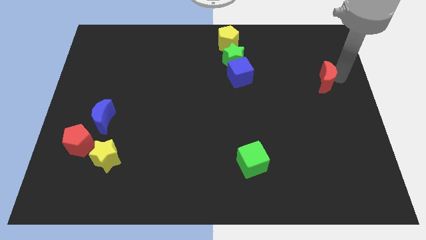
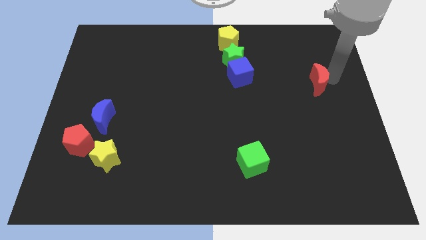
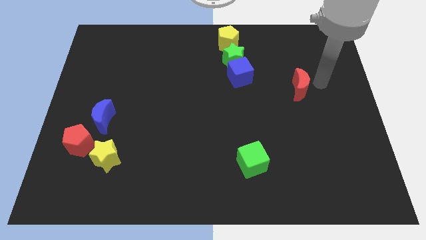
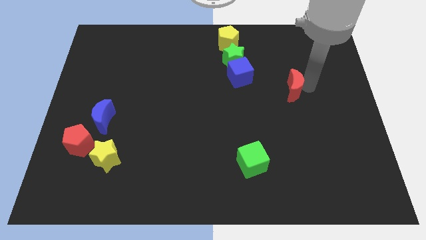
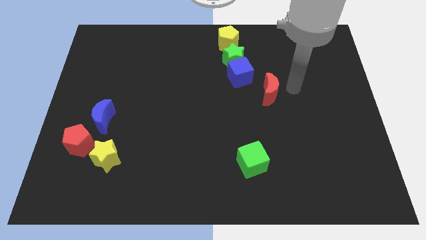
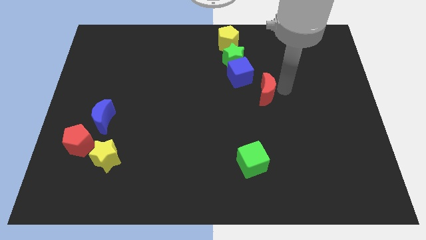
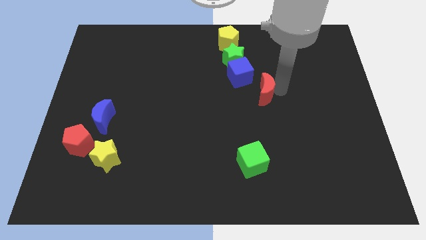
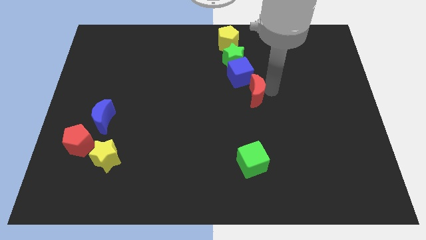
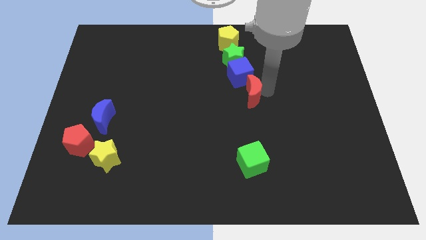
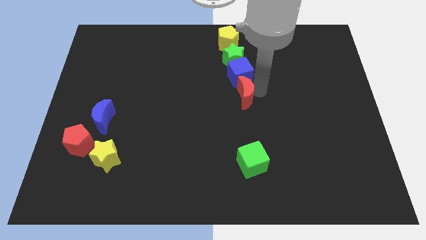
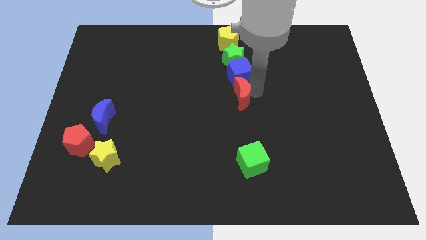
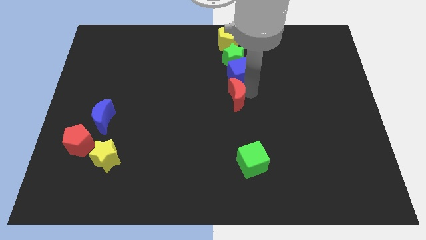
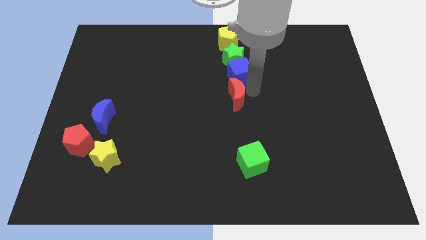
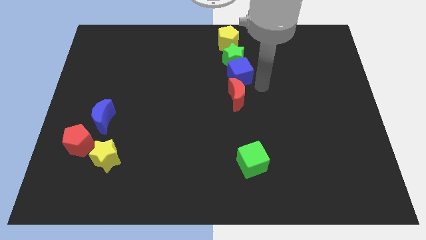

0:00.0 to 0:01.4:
move the red crescent to the center of the board

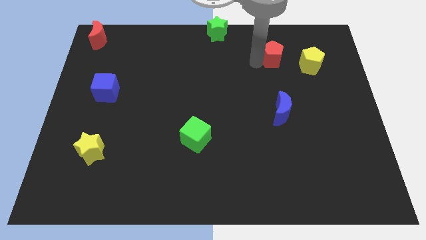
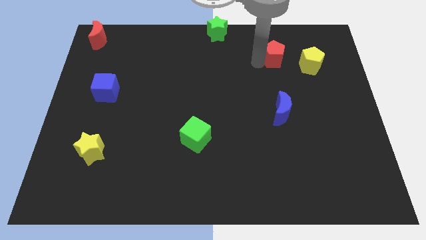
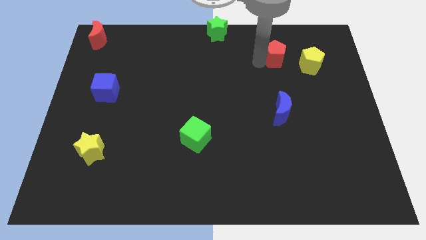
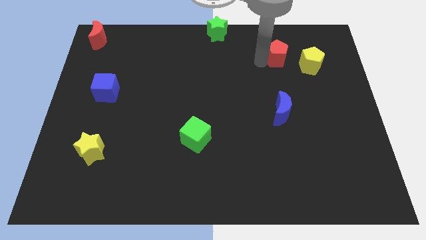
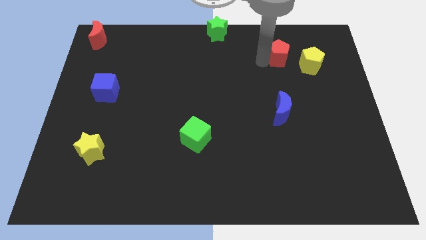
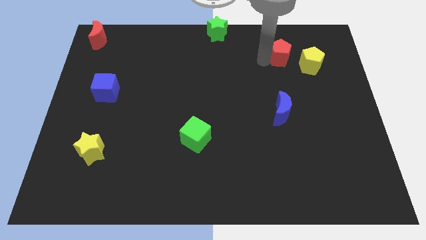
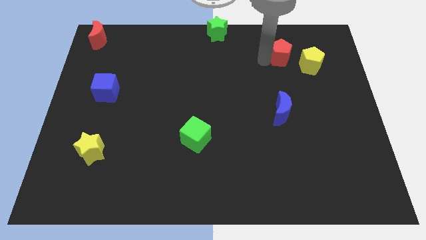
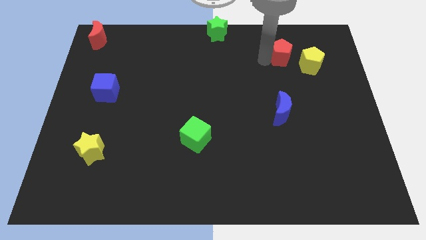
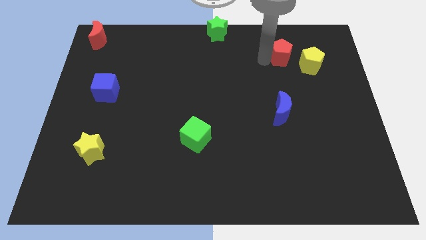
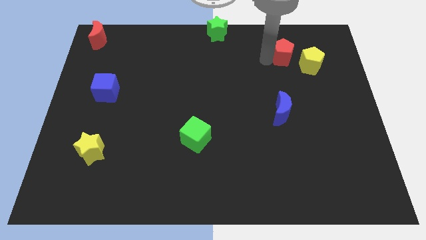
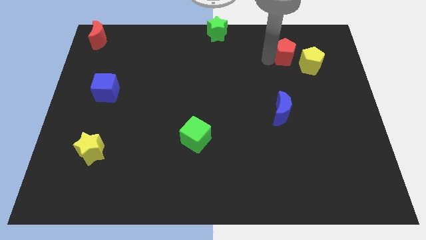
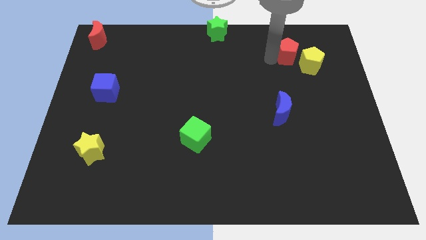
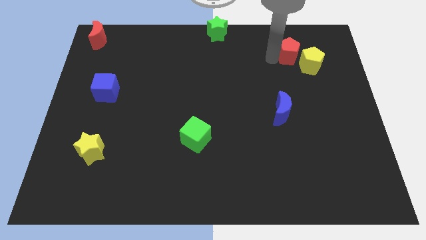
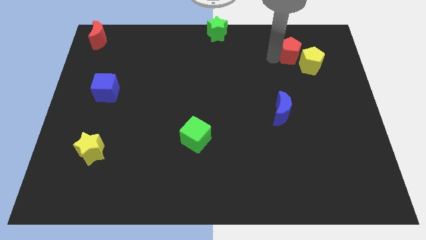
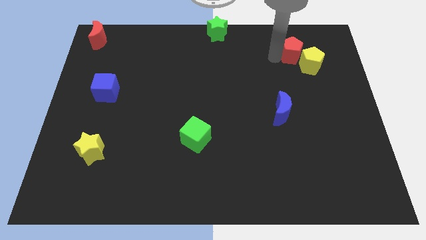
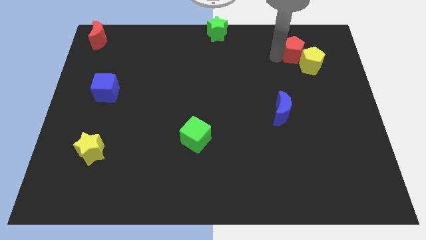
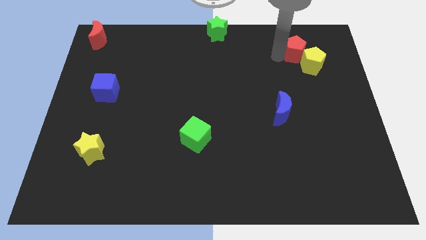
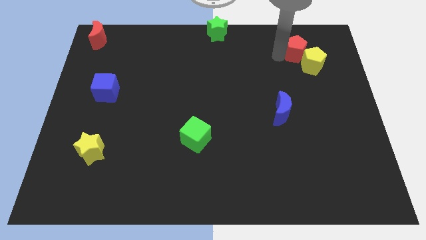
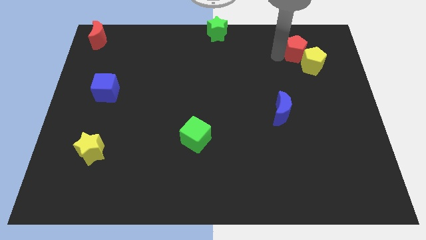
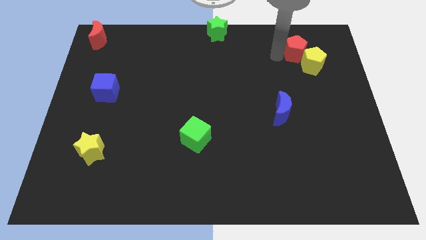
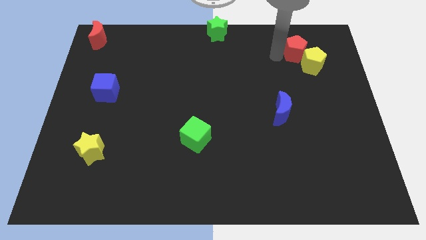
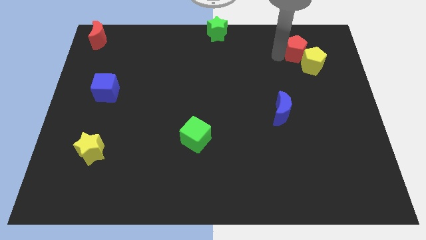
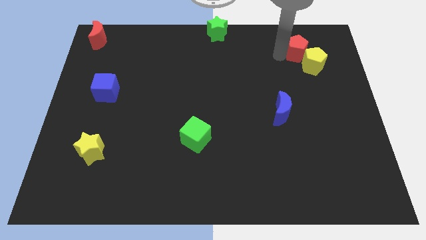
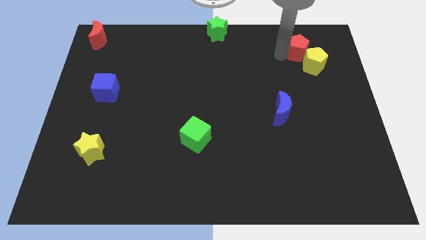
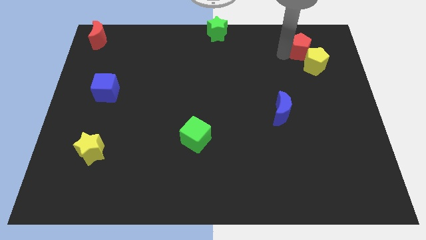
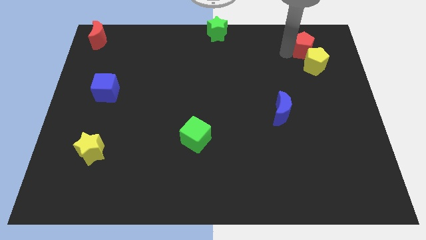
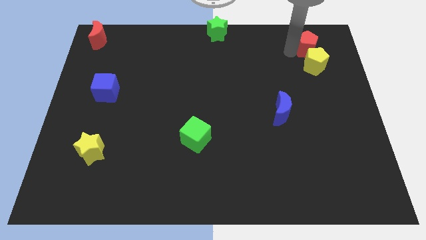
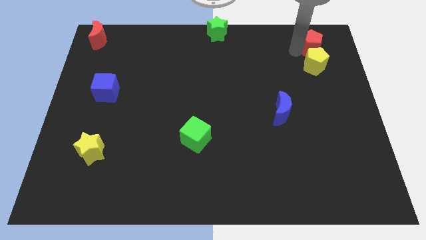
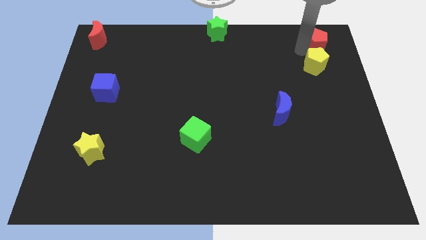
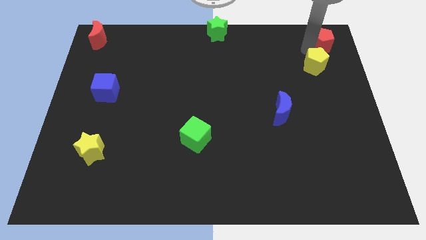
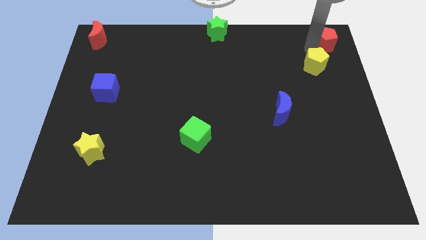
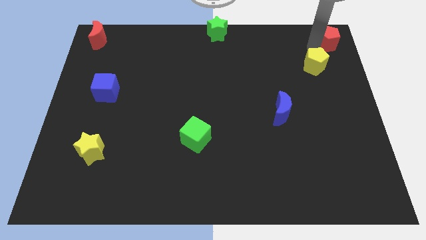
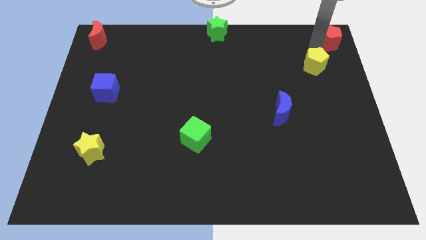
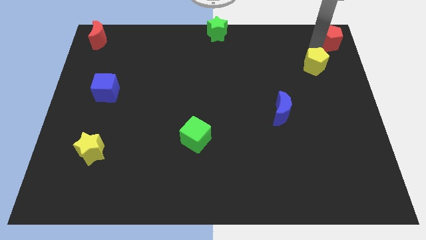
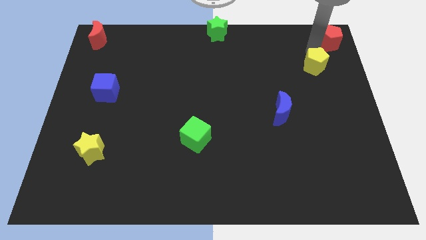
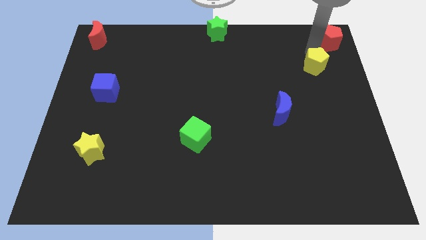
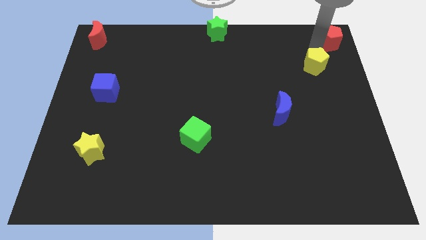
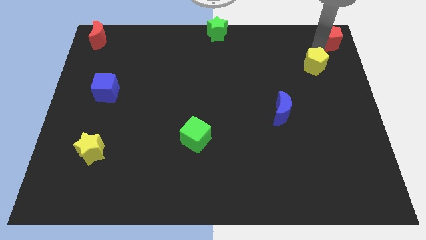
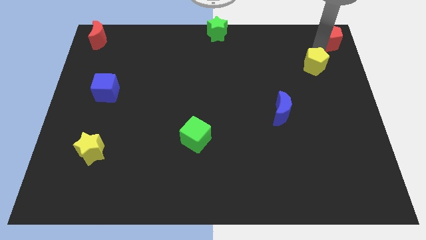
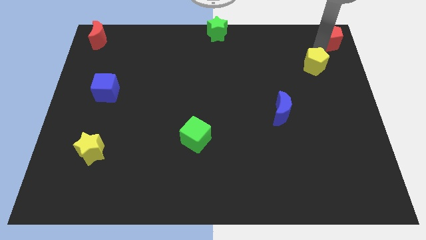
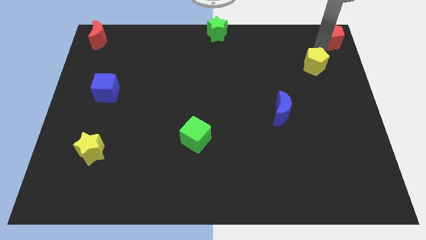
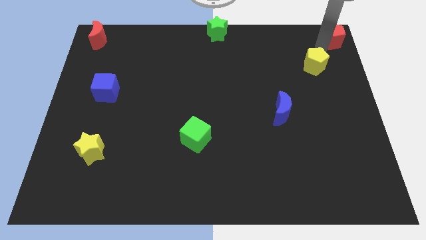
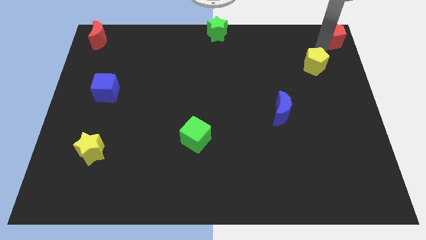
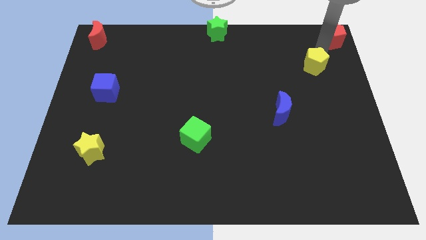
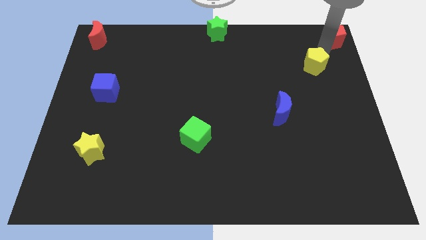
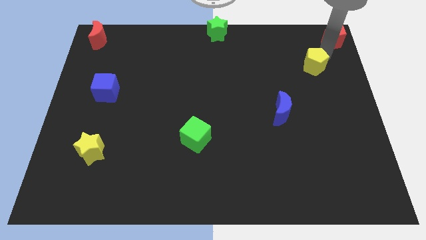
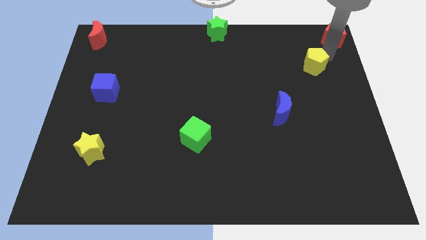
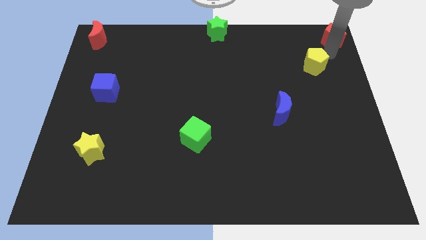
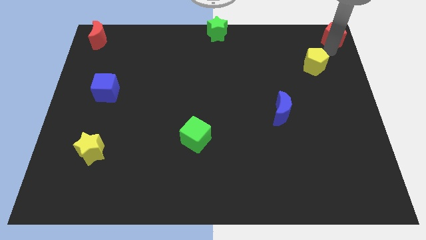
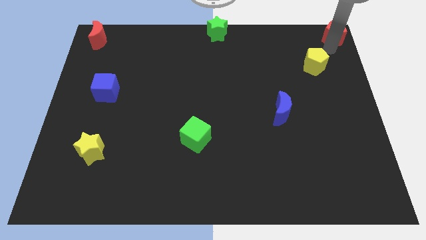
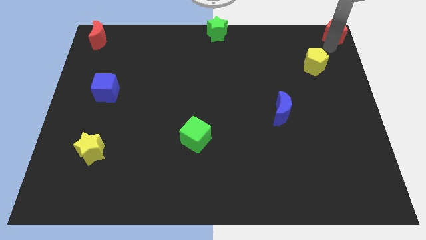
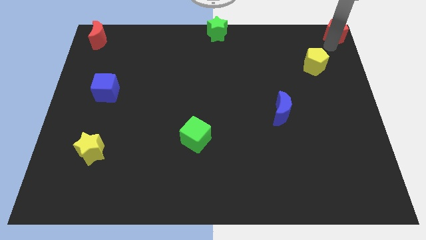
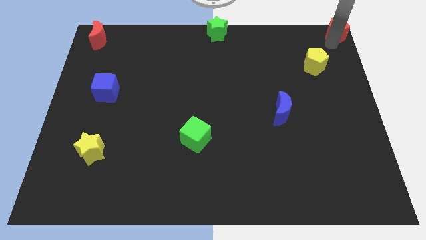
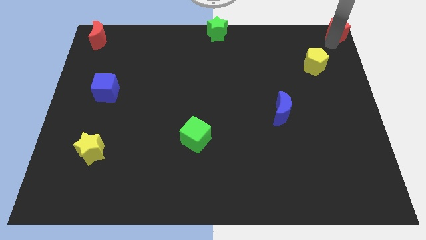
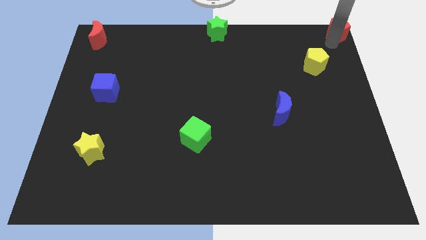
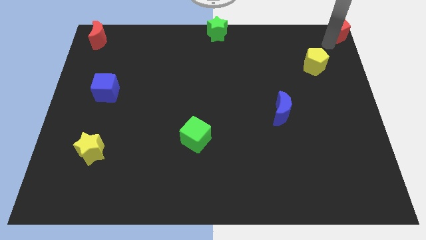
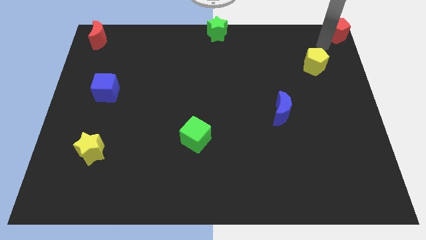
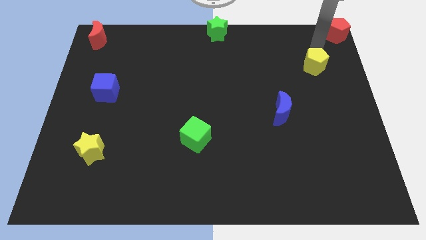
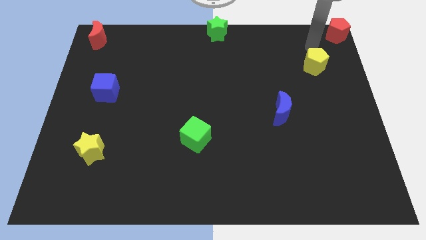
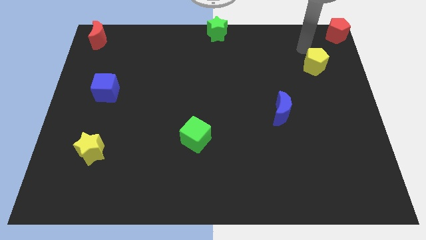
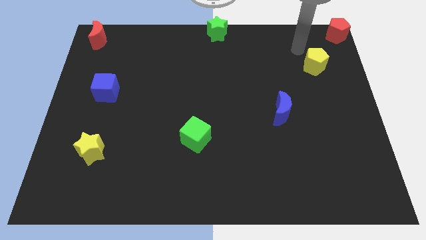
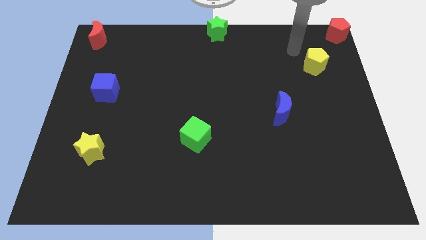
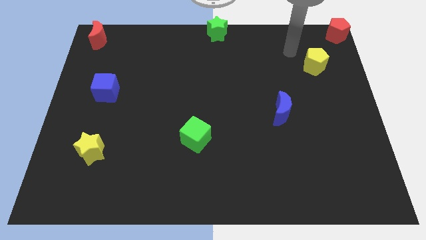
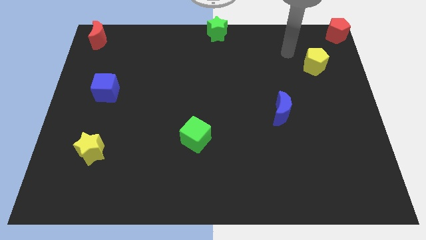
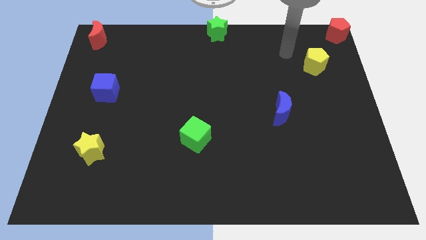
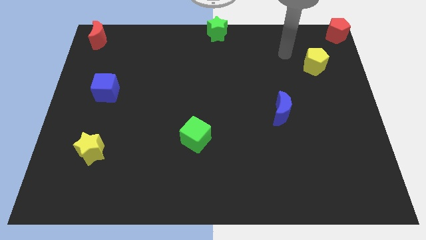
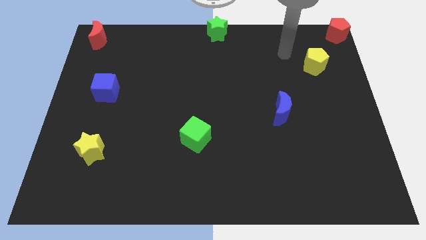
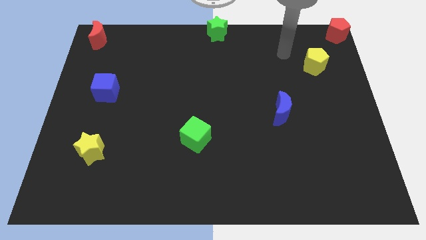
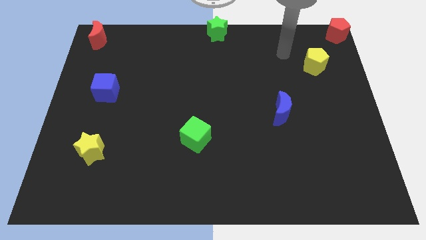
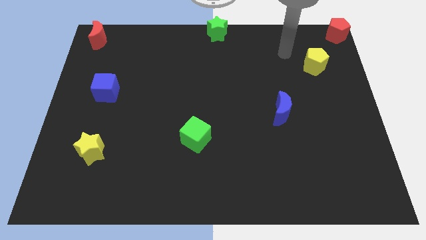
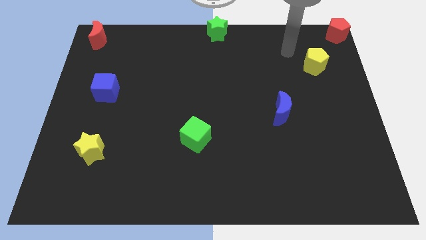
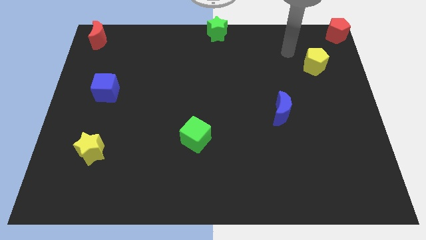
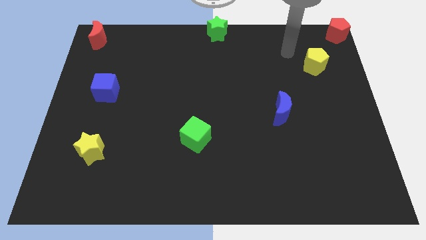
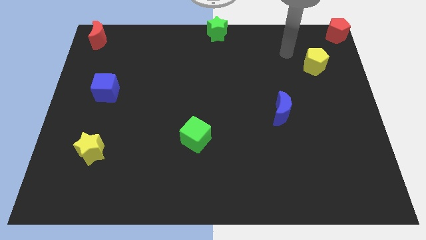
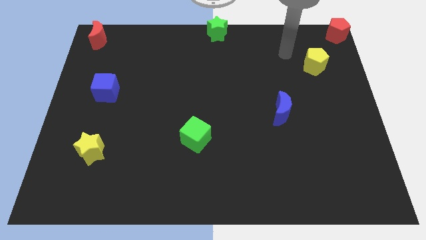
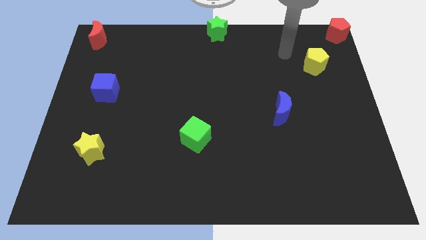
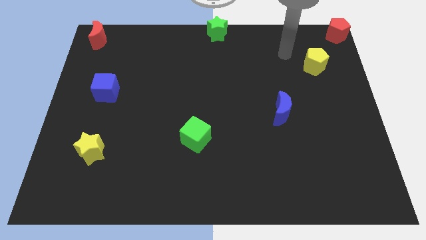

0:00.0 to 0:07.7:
place the red pentagon at the top right of the board
